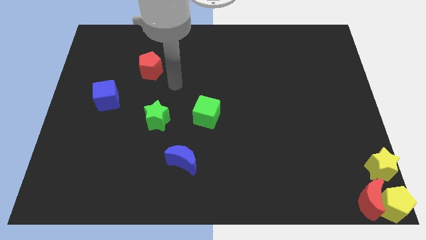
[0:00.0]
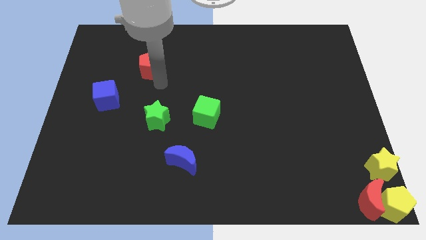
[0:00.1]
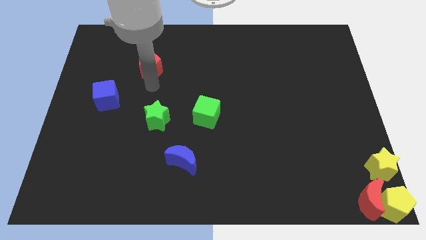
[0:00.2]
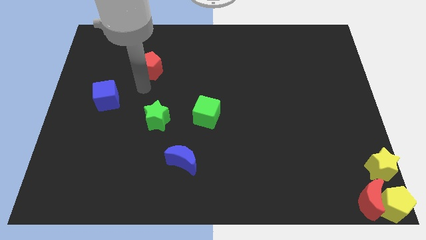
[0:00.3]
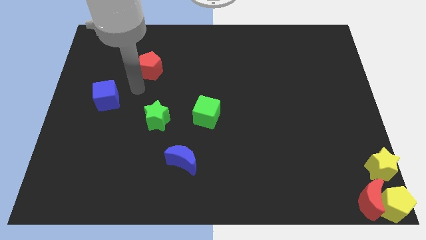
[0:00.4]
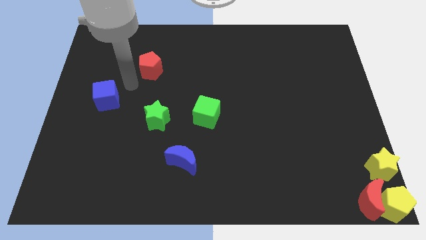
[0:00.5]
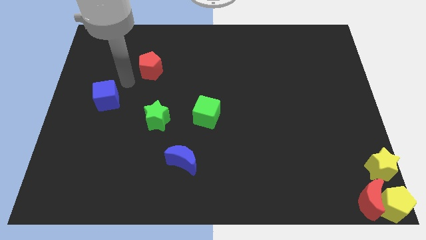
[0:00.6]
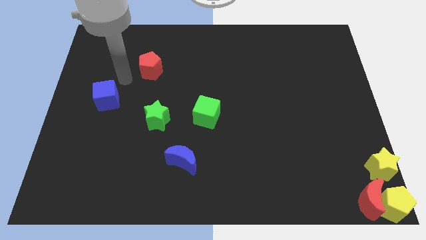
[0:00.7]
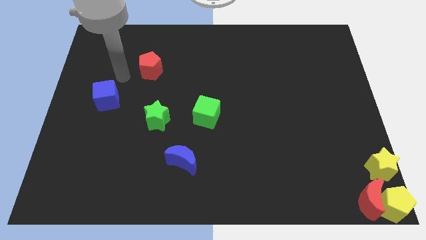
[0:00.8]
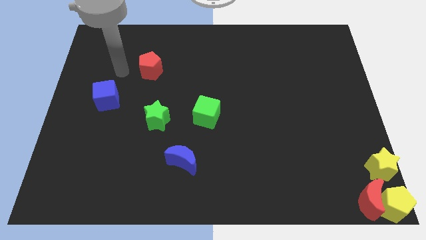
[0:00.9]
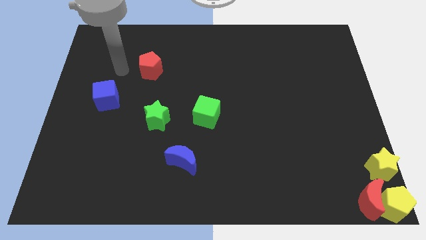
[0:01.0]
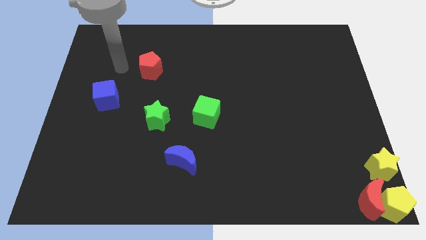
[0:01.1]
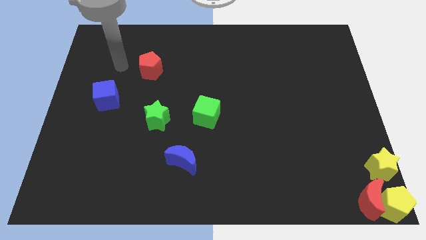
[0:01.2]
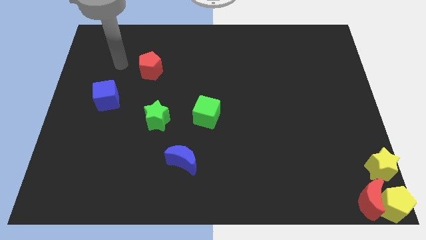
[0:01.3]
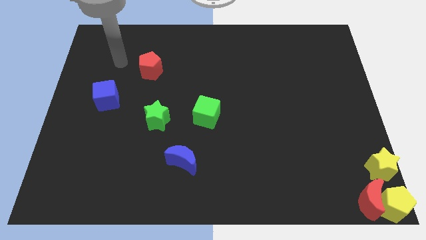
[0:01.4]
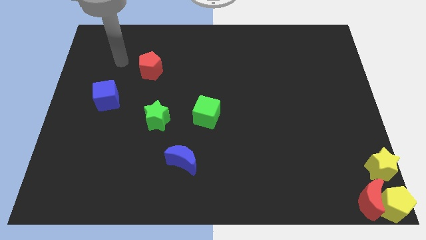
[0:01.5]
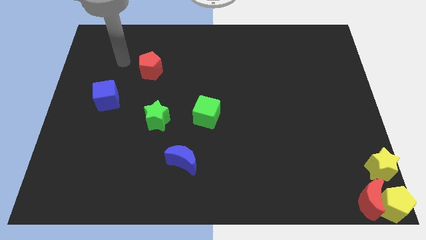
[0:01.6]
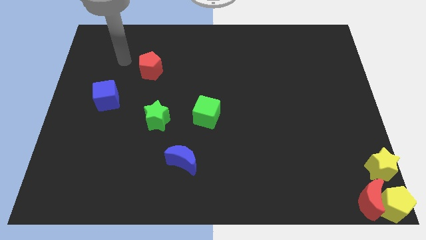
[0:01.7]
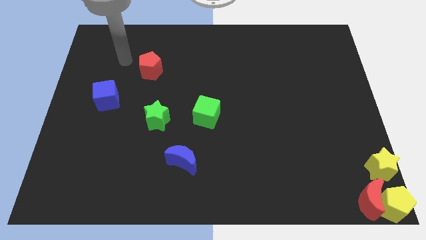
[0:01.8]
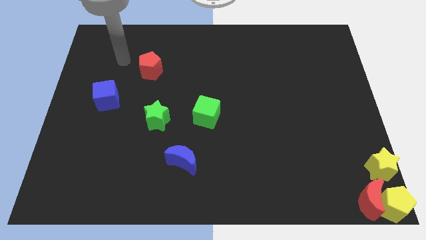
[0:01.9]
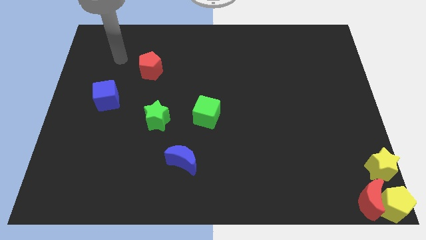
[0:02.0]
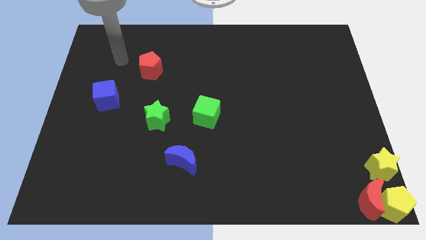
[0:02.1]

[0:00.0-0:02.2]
place your arm to the left of red pentagon

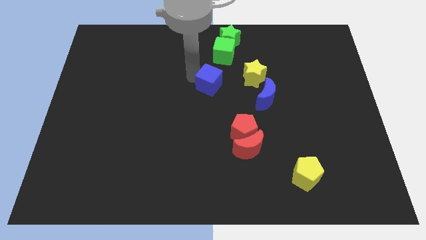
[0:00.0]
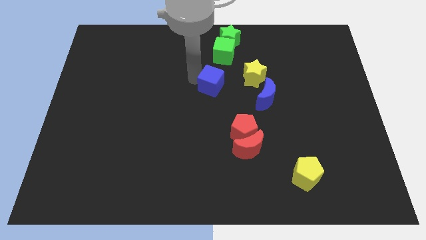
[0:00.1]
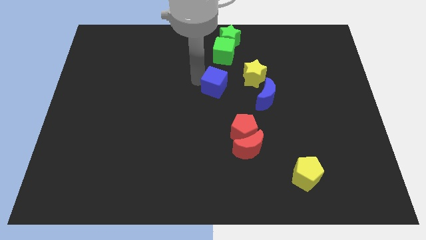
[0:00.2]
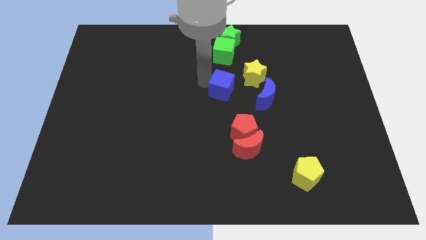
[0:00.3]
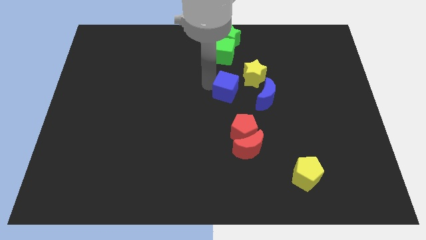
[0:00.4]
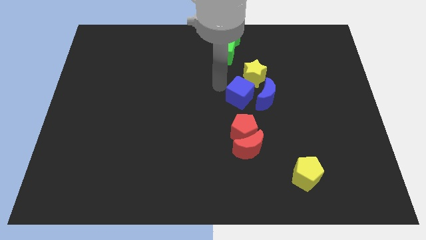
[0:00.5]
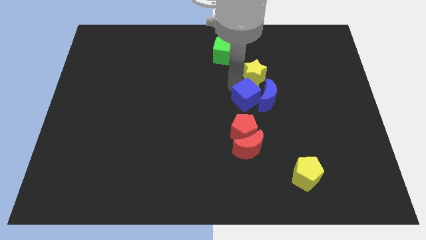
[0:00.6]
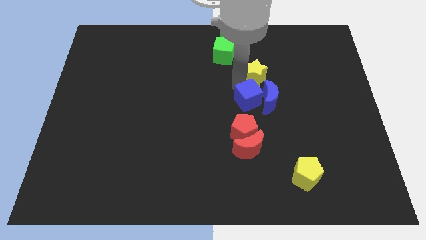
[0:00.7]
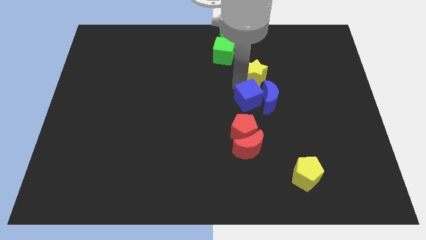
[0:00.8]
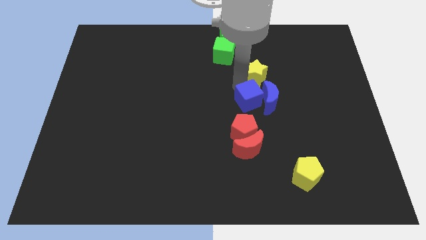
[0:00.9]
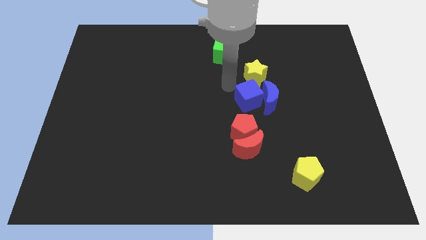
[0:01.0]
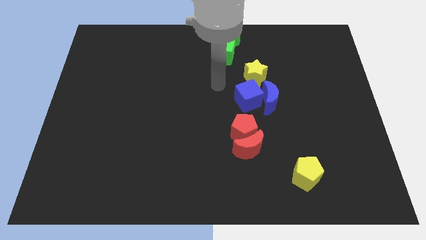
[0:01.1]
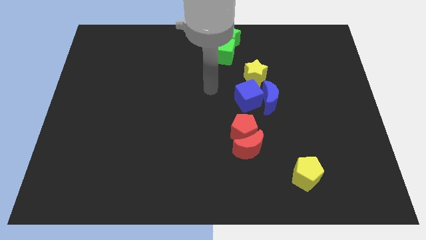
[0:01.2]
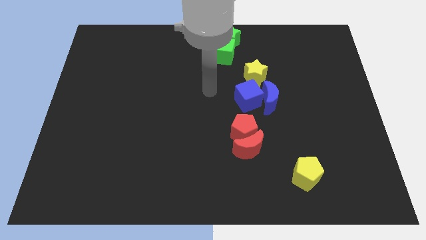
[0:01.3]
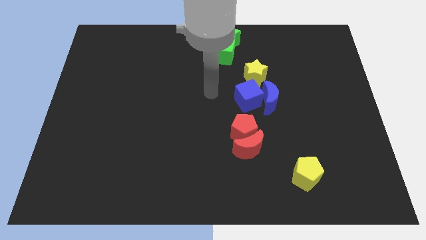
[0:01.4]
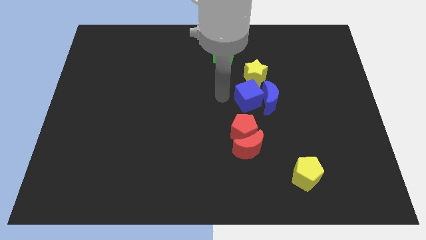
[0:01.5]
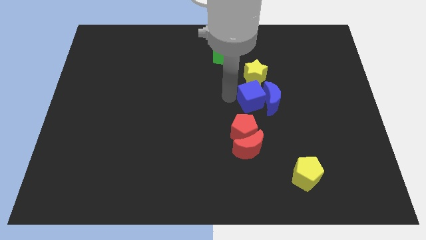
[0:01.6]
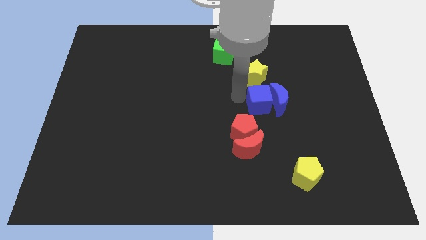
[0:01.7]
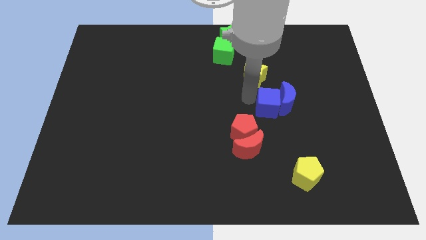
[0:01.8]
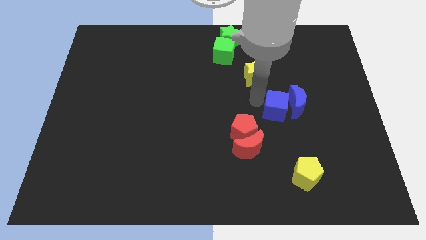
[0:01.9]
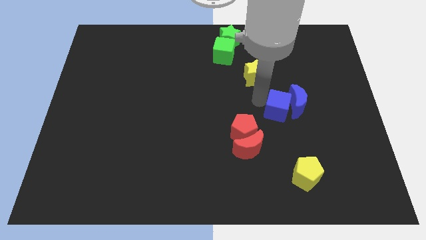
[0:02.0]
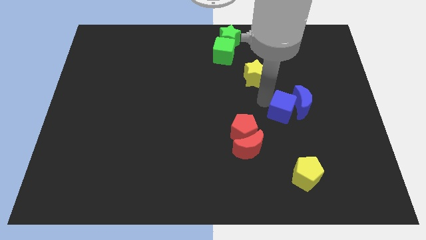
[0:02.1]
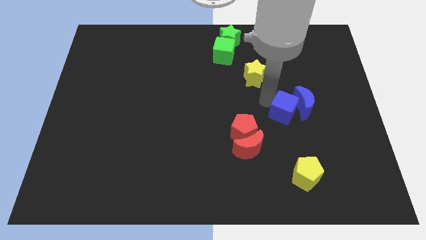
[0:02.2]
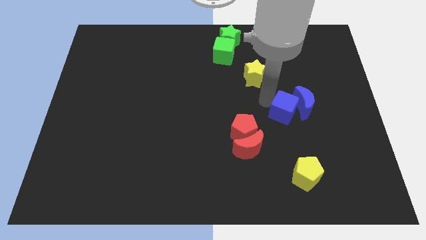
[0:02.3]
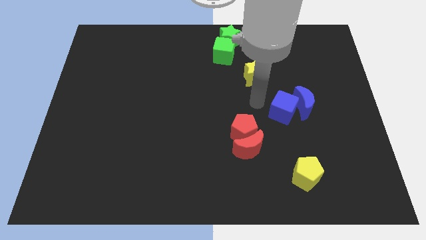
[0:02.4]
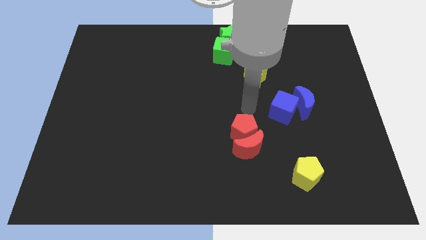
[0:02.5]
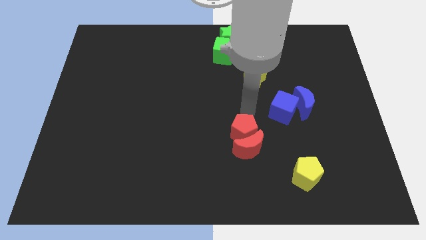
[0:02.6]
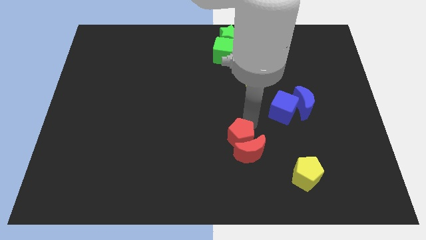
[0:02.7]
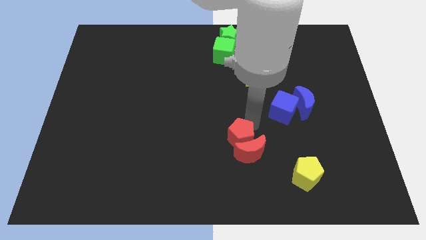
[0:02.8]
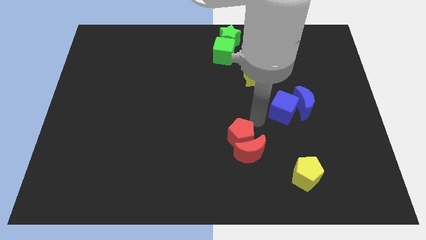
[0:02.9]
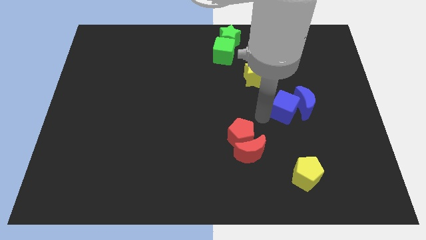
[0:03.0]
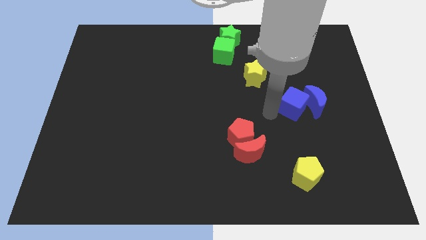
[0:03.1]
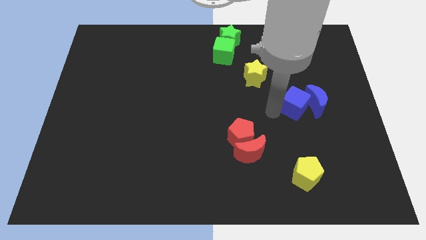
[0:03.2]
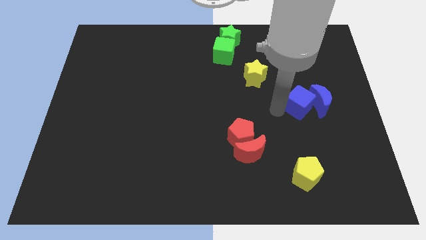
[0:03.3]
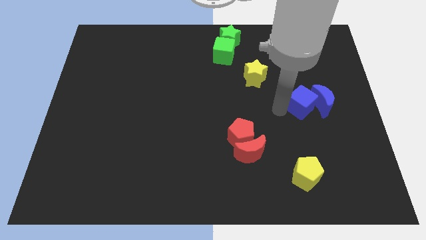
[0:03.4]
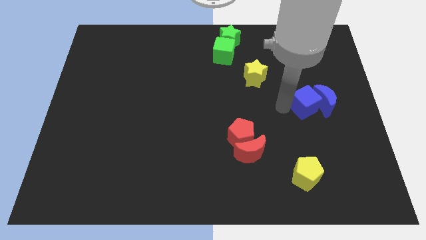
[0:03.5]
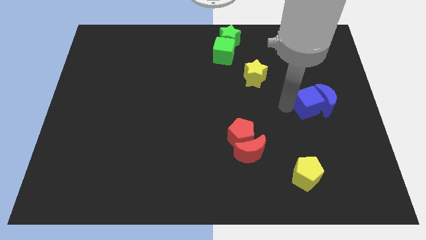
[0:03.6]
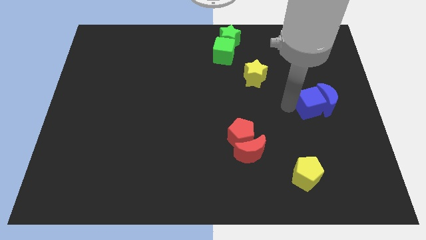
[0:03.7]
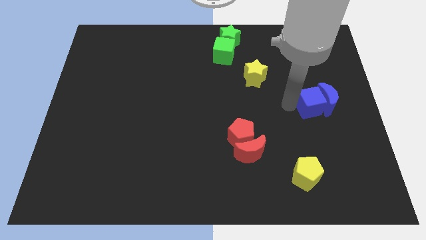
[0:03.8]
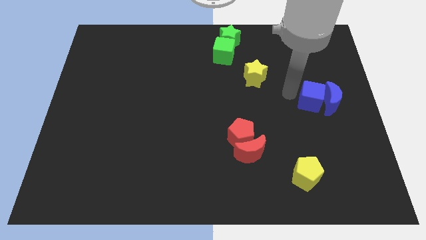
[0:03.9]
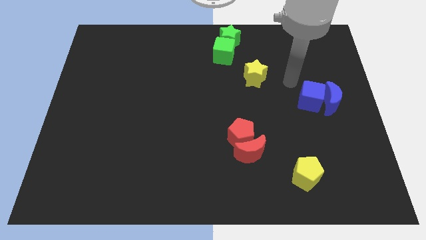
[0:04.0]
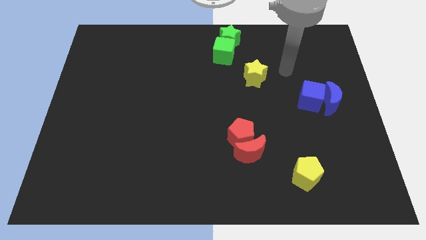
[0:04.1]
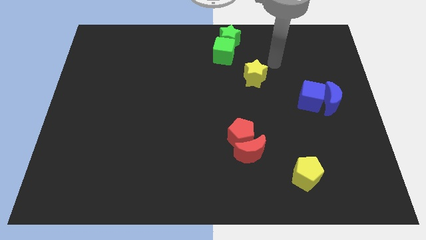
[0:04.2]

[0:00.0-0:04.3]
separate both the blue blocks from the yellow star

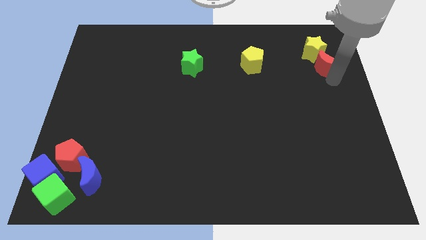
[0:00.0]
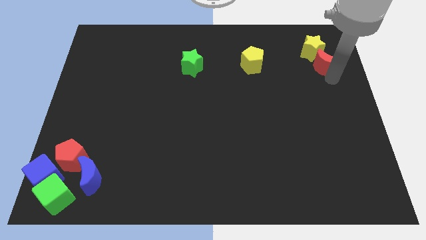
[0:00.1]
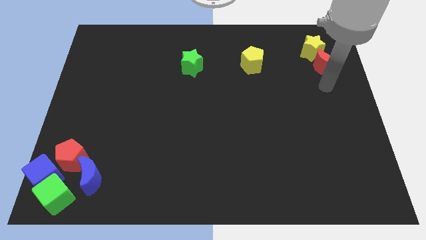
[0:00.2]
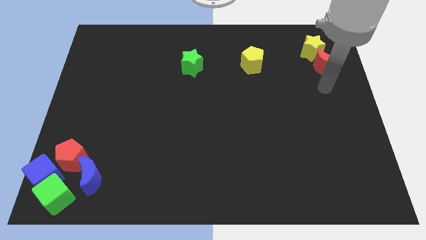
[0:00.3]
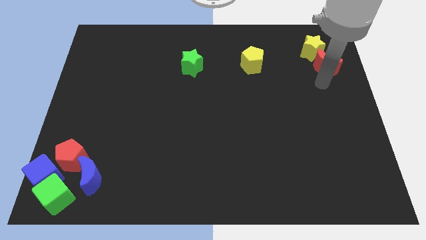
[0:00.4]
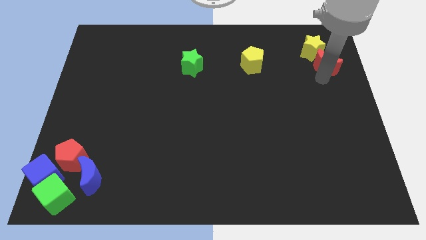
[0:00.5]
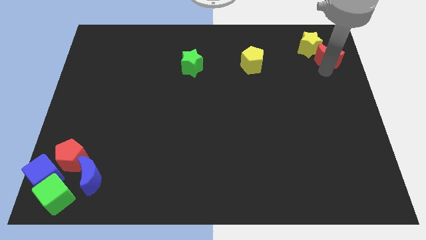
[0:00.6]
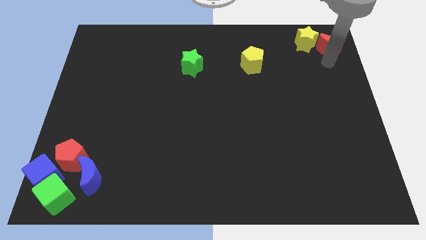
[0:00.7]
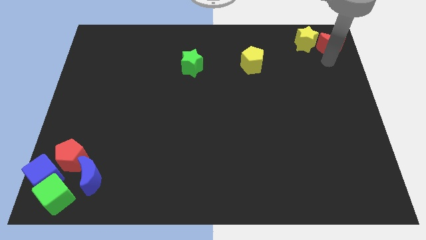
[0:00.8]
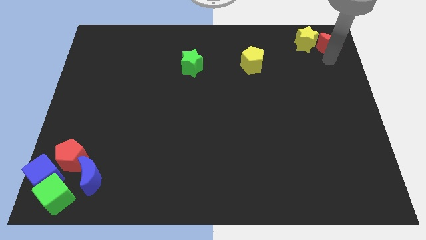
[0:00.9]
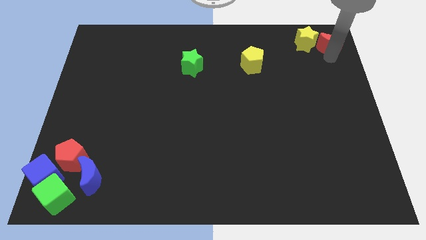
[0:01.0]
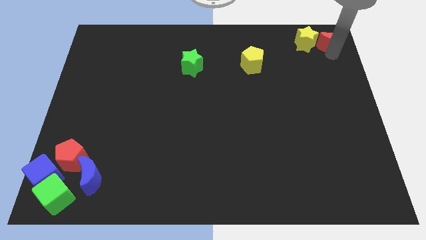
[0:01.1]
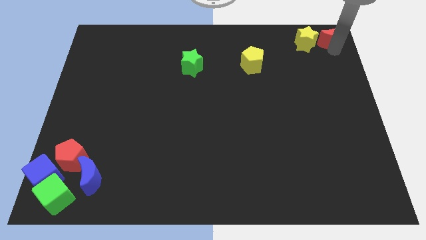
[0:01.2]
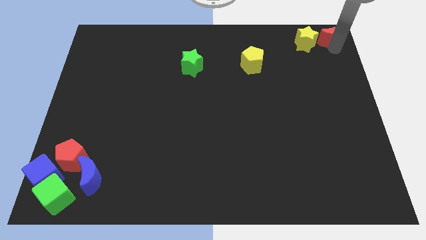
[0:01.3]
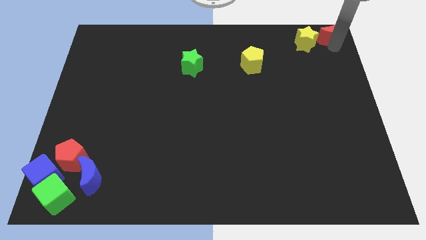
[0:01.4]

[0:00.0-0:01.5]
move the red crescent to the right of the yellow star

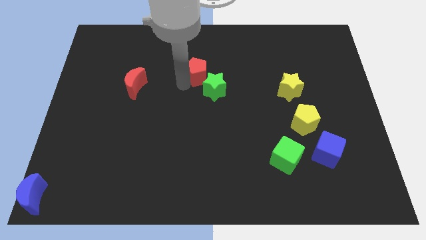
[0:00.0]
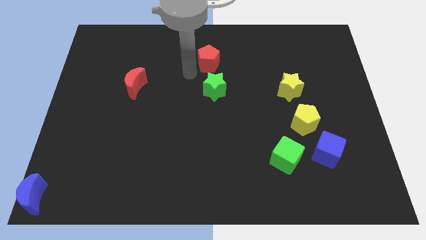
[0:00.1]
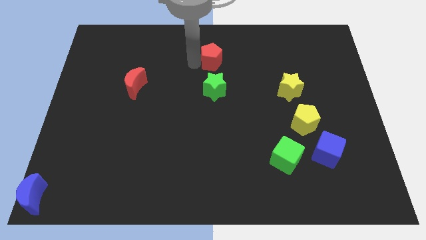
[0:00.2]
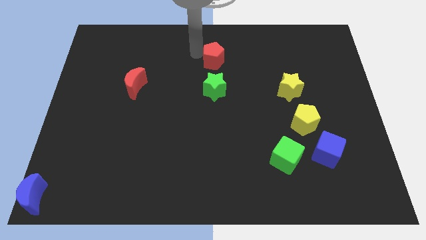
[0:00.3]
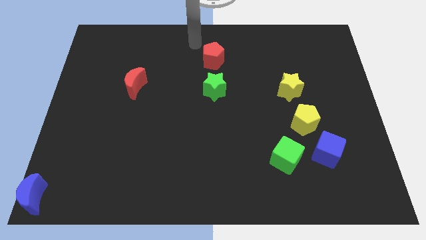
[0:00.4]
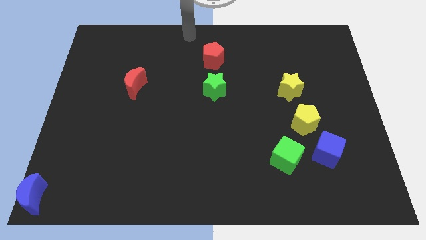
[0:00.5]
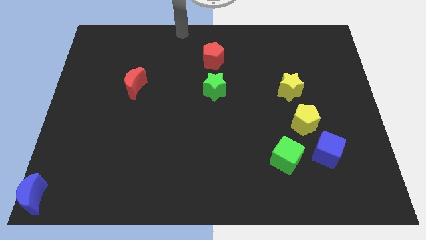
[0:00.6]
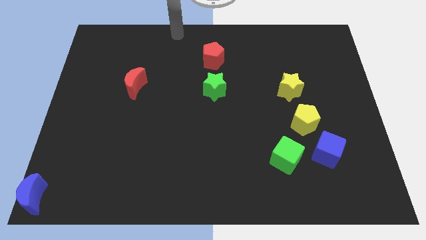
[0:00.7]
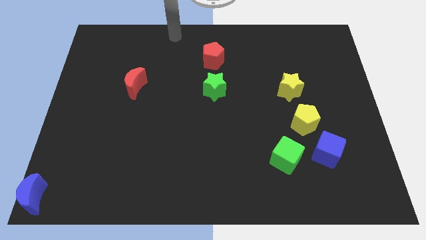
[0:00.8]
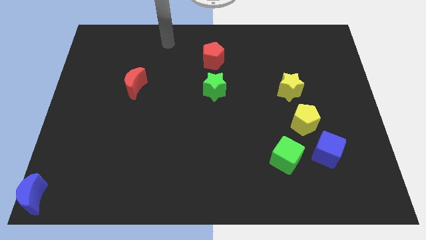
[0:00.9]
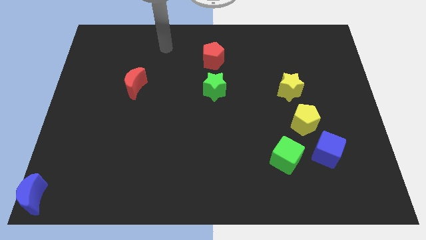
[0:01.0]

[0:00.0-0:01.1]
separate red pentagon from green star
